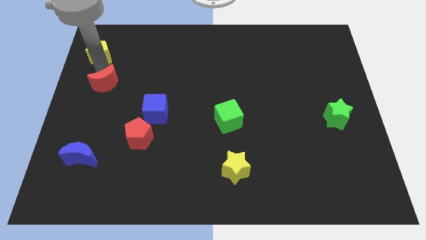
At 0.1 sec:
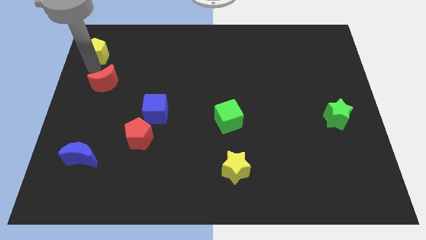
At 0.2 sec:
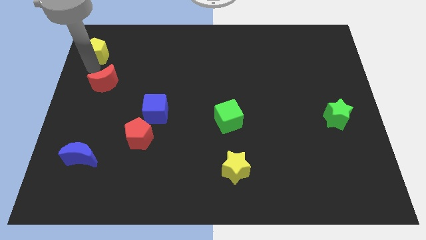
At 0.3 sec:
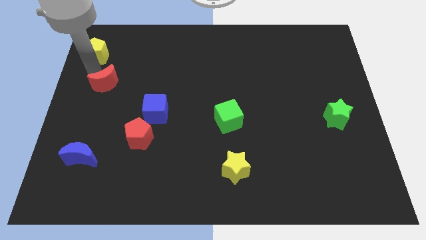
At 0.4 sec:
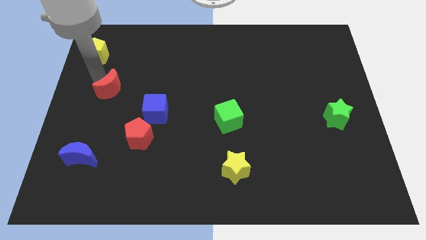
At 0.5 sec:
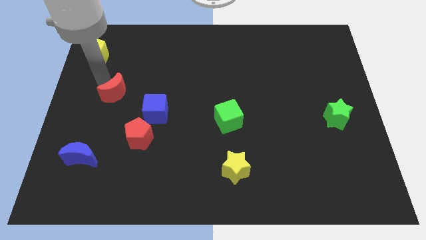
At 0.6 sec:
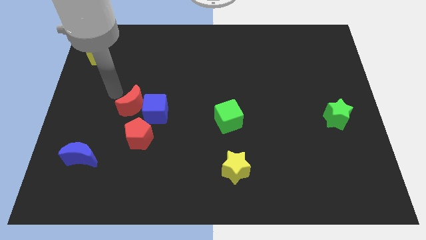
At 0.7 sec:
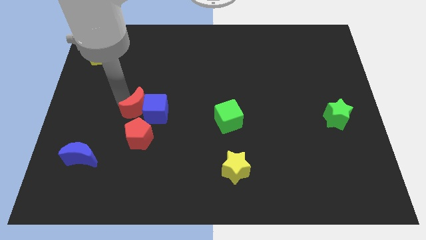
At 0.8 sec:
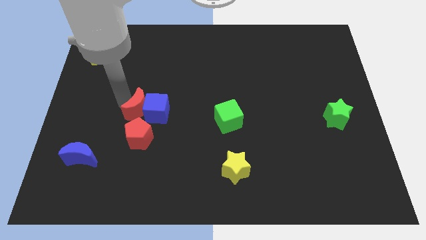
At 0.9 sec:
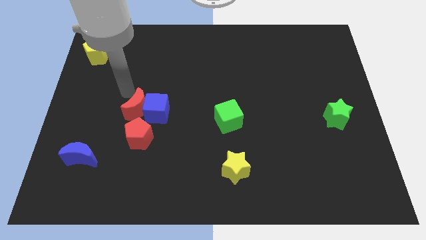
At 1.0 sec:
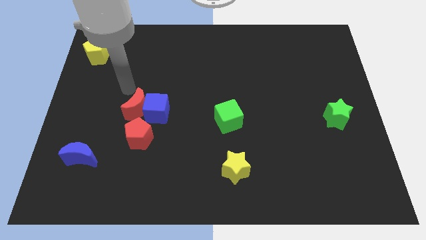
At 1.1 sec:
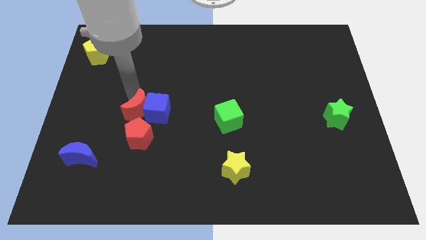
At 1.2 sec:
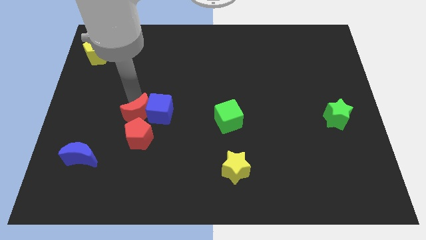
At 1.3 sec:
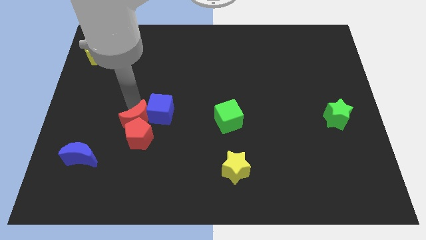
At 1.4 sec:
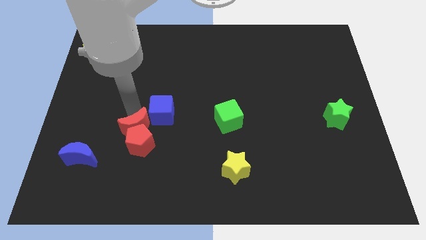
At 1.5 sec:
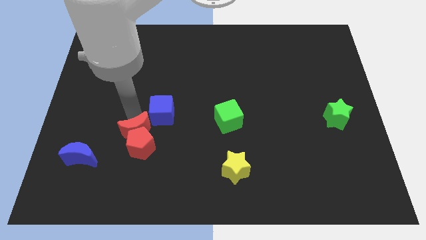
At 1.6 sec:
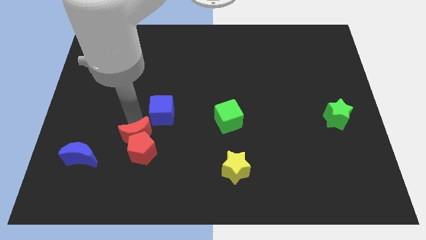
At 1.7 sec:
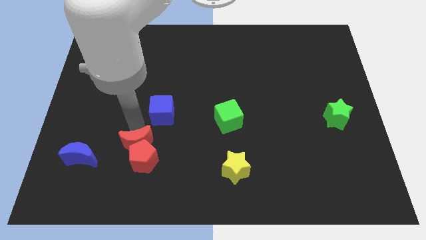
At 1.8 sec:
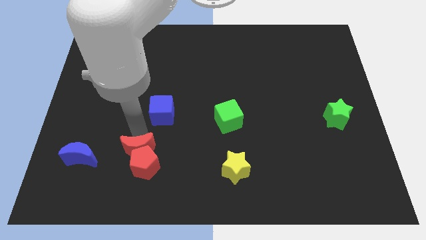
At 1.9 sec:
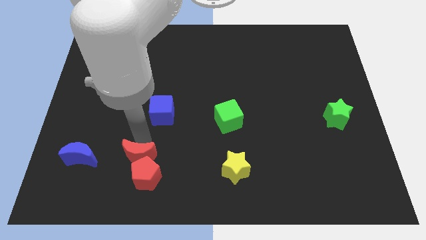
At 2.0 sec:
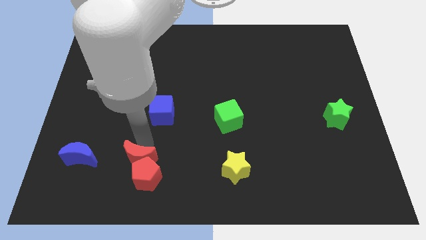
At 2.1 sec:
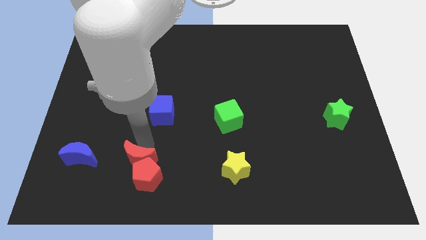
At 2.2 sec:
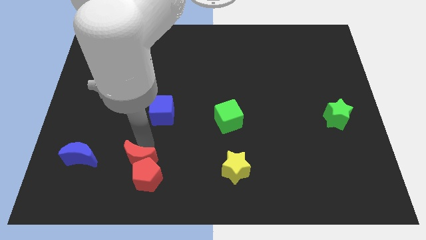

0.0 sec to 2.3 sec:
push the red moon to the top side of the red pentagon

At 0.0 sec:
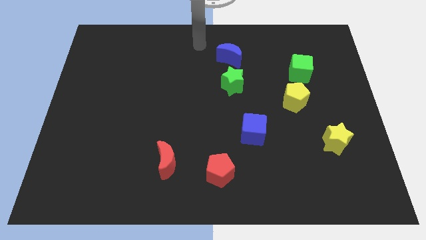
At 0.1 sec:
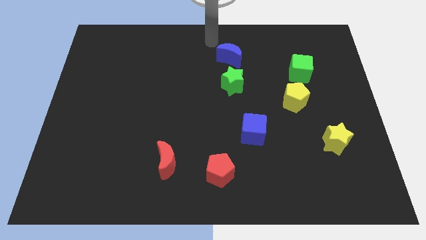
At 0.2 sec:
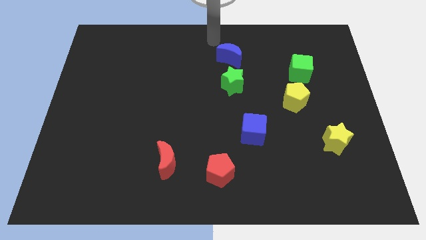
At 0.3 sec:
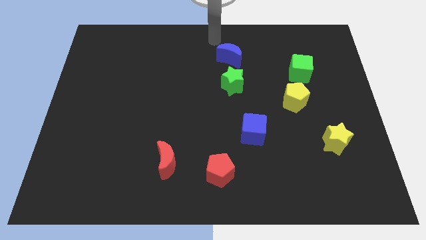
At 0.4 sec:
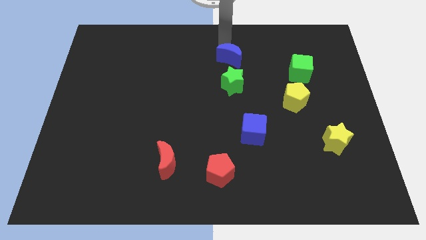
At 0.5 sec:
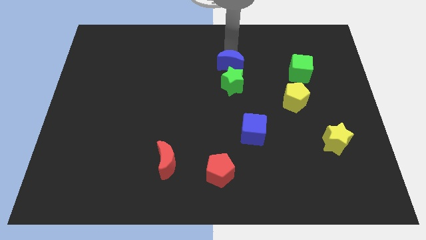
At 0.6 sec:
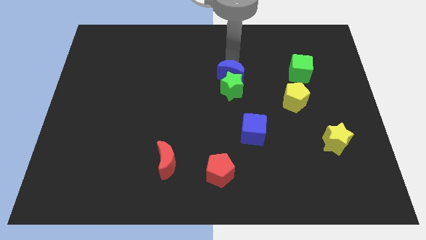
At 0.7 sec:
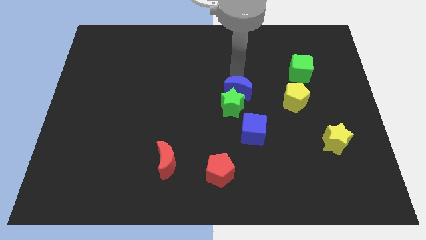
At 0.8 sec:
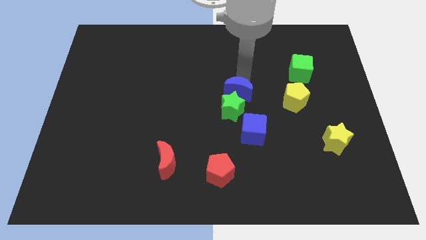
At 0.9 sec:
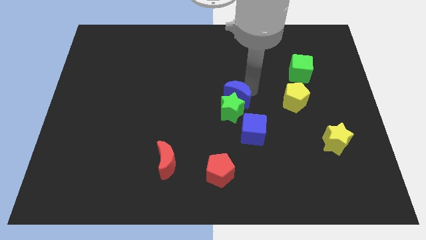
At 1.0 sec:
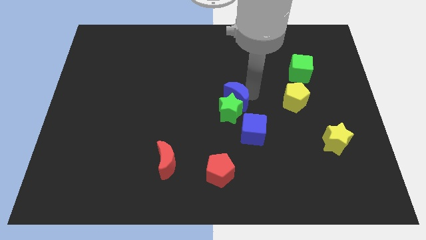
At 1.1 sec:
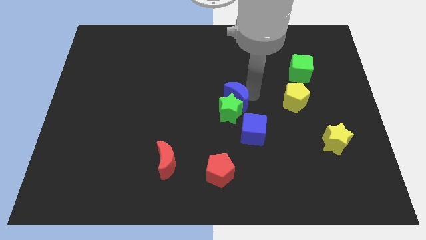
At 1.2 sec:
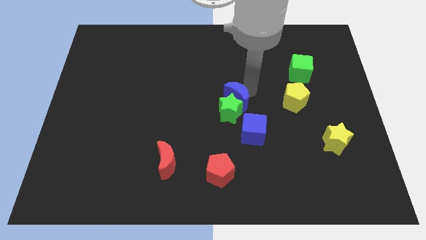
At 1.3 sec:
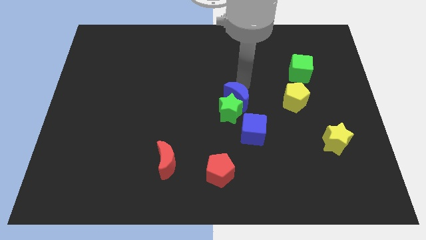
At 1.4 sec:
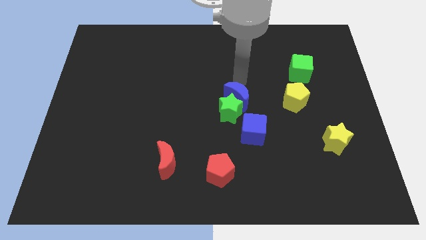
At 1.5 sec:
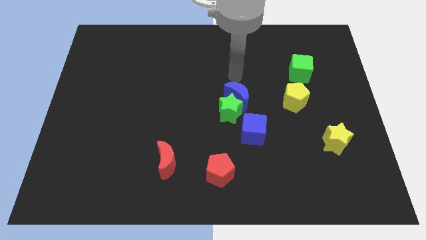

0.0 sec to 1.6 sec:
move blue moon towards the green star

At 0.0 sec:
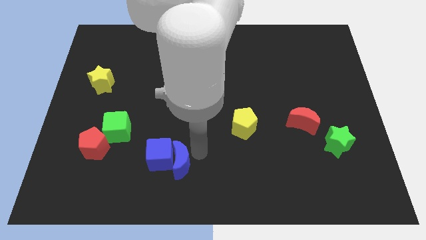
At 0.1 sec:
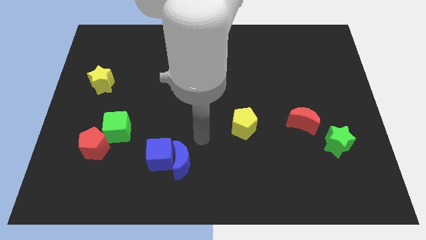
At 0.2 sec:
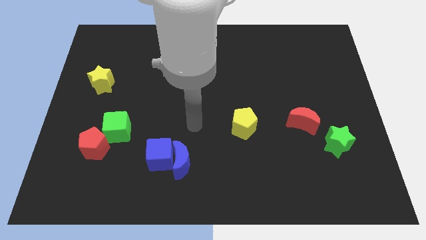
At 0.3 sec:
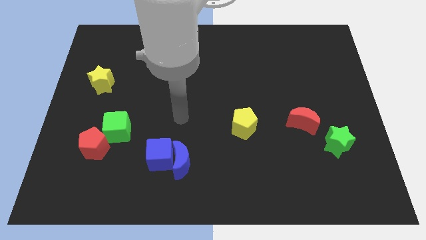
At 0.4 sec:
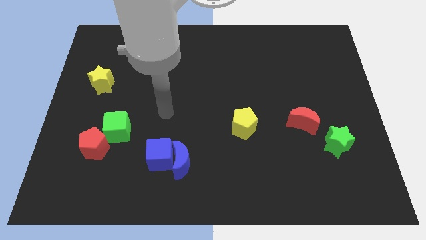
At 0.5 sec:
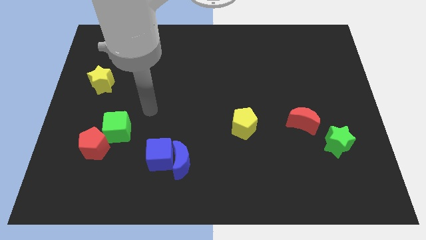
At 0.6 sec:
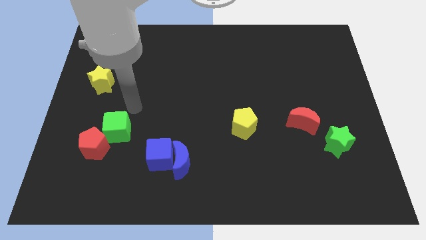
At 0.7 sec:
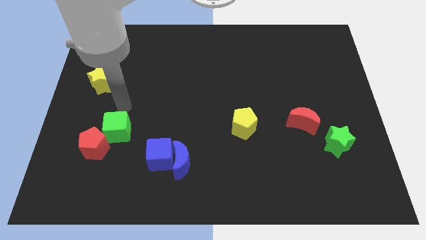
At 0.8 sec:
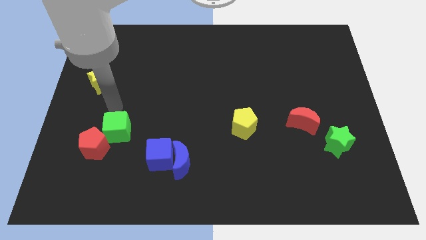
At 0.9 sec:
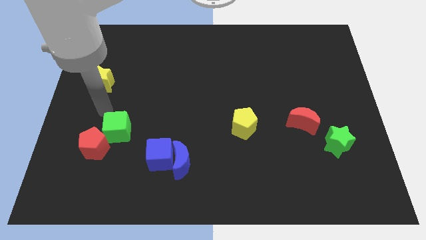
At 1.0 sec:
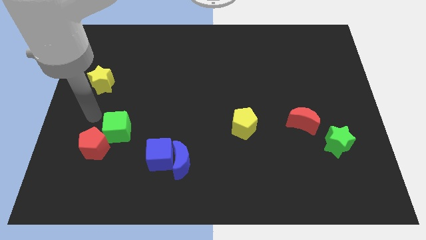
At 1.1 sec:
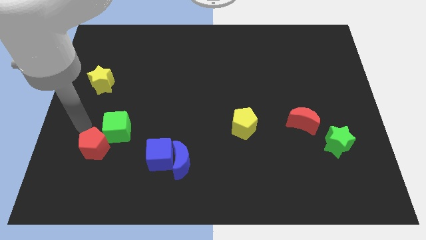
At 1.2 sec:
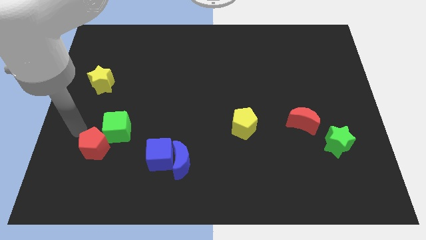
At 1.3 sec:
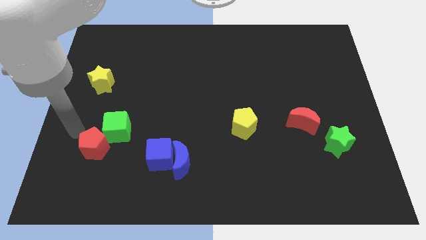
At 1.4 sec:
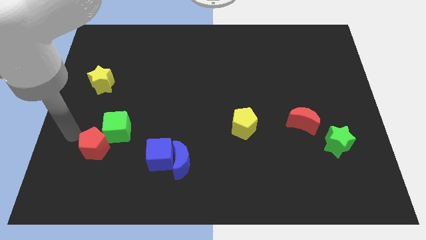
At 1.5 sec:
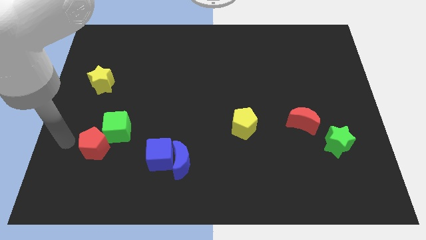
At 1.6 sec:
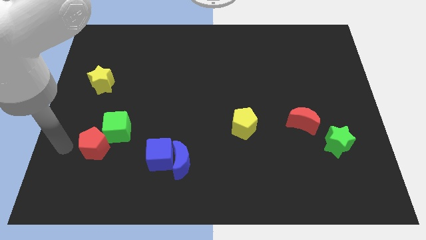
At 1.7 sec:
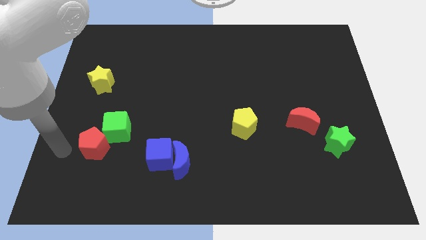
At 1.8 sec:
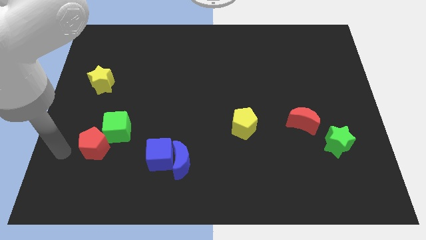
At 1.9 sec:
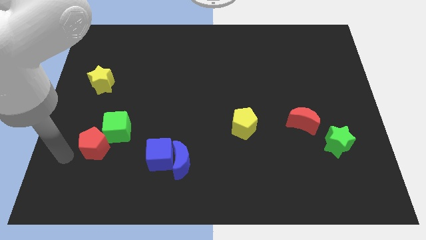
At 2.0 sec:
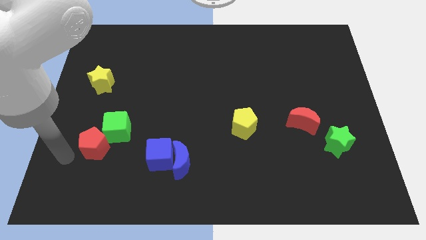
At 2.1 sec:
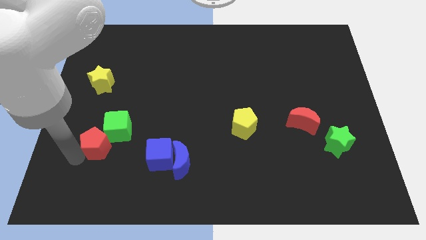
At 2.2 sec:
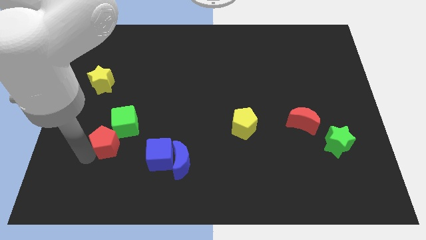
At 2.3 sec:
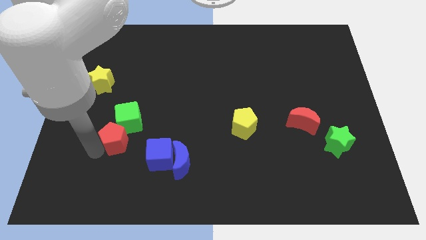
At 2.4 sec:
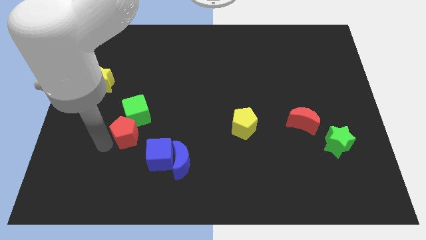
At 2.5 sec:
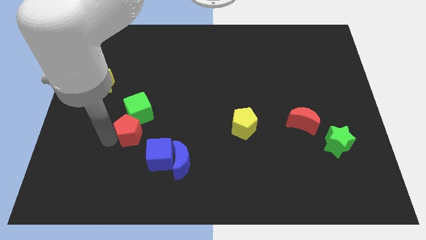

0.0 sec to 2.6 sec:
move red pentagon and green cube towards diagonally

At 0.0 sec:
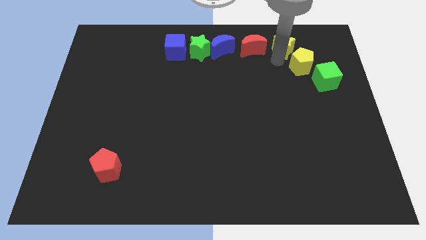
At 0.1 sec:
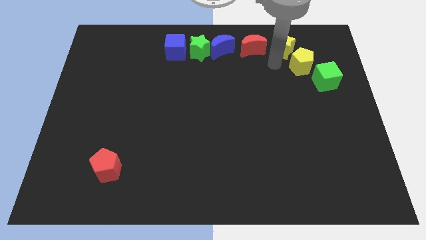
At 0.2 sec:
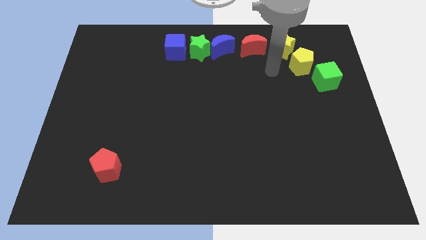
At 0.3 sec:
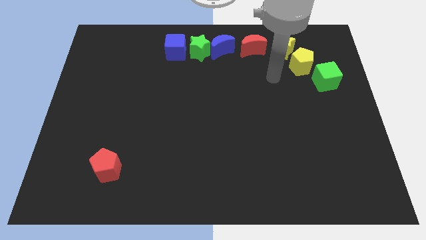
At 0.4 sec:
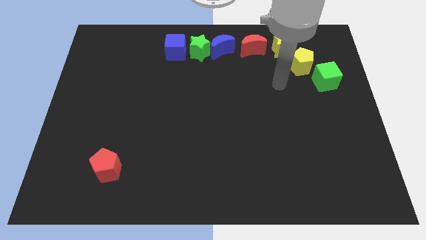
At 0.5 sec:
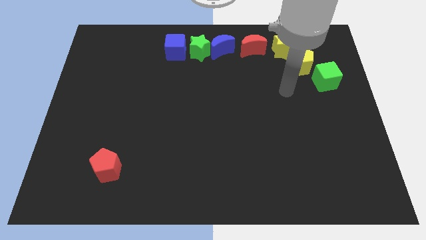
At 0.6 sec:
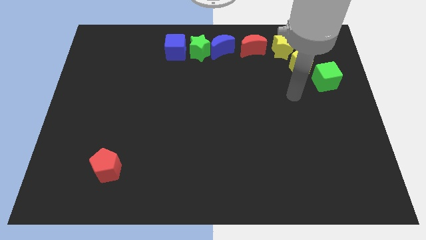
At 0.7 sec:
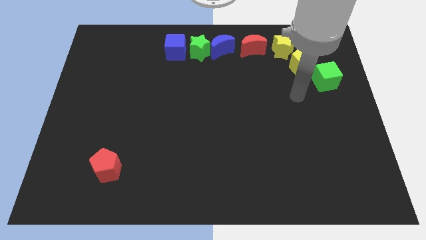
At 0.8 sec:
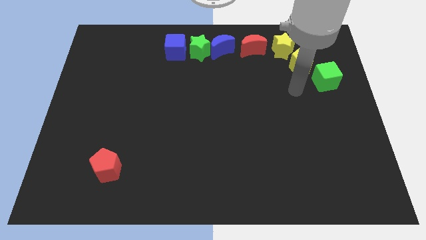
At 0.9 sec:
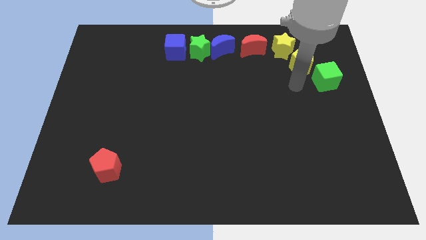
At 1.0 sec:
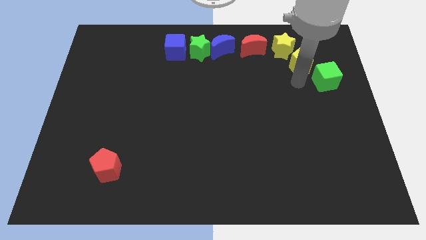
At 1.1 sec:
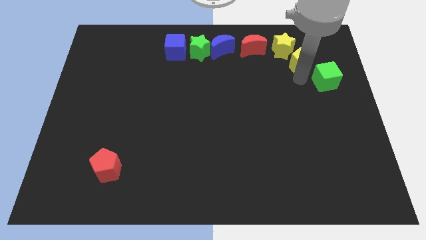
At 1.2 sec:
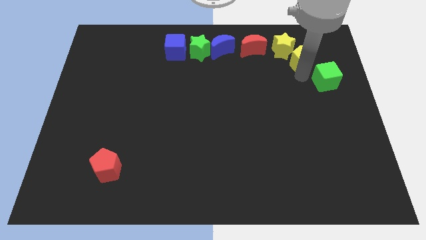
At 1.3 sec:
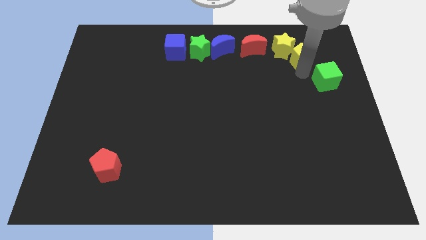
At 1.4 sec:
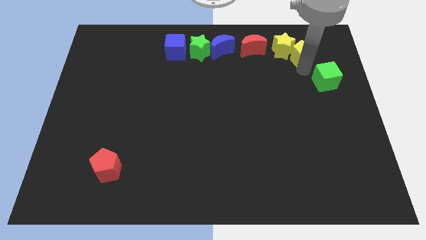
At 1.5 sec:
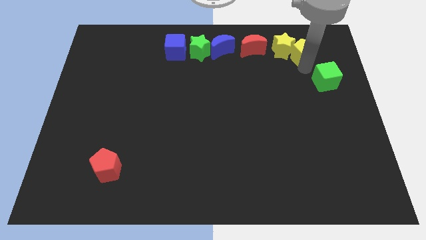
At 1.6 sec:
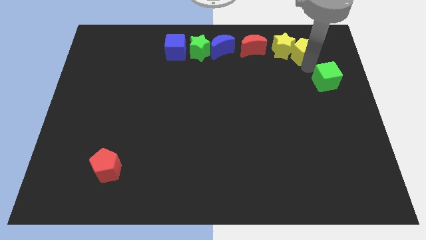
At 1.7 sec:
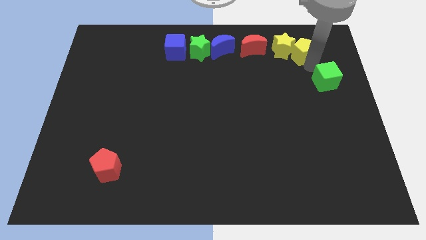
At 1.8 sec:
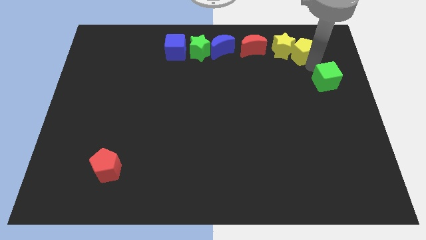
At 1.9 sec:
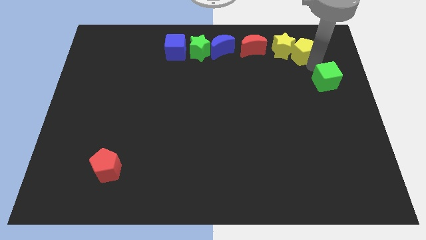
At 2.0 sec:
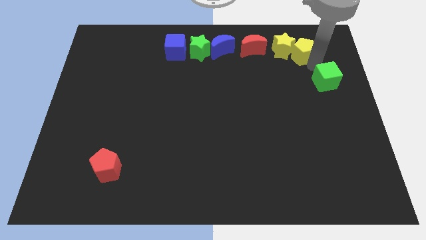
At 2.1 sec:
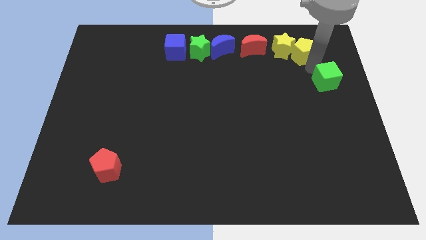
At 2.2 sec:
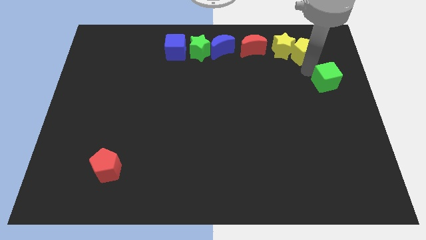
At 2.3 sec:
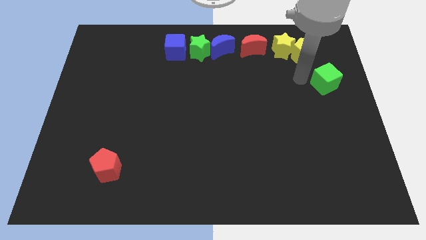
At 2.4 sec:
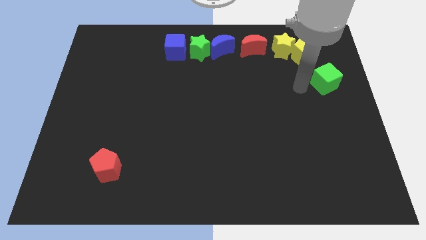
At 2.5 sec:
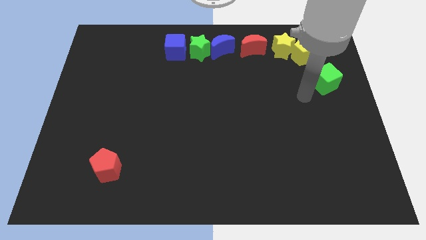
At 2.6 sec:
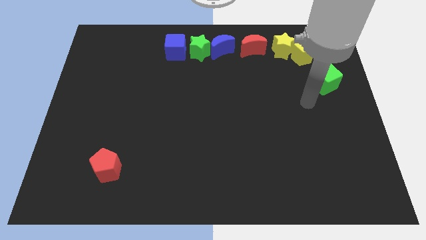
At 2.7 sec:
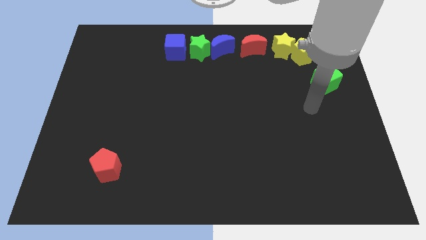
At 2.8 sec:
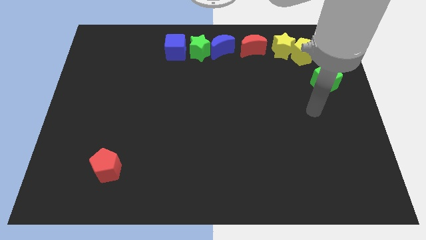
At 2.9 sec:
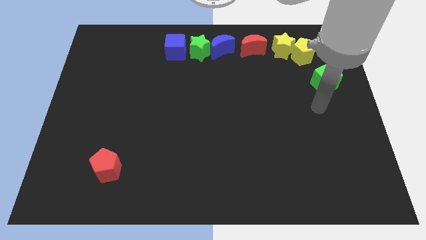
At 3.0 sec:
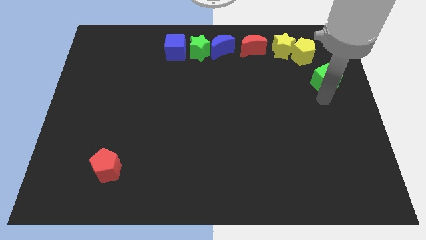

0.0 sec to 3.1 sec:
move the yellow pentagon to the right of the yellow star
